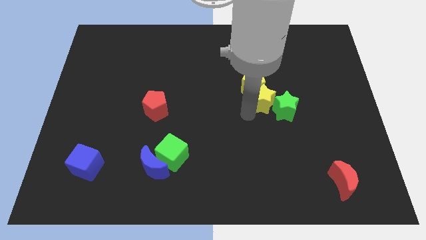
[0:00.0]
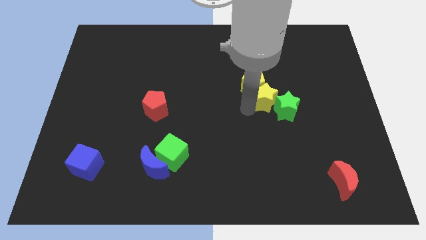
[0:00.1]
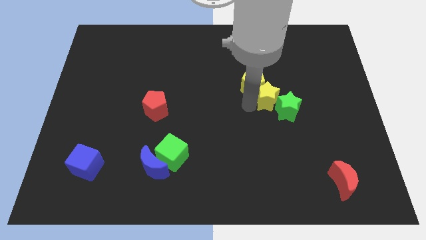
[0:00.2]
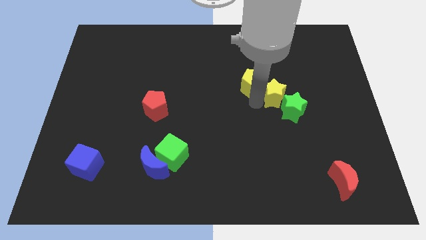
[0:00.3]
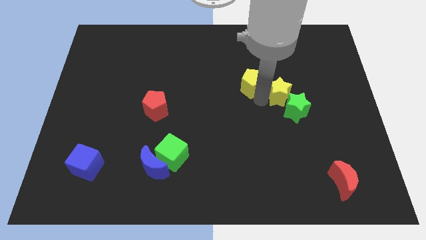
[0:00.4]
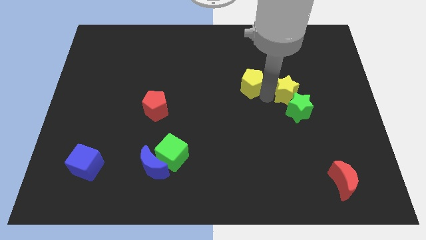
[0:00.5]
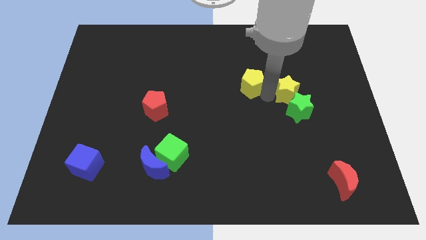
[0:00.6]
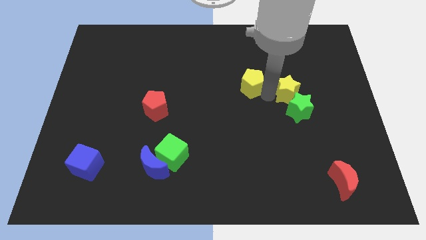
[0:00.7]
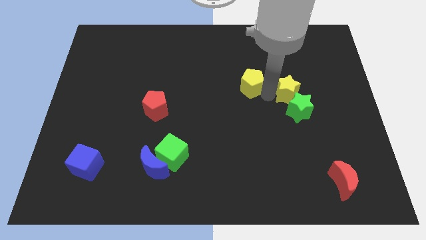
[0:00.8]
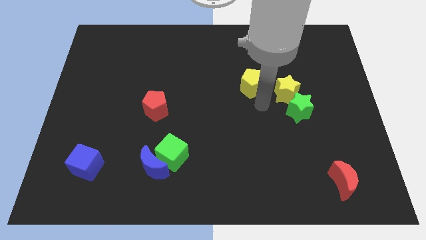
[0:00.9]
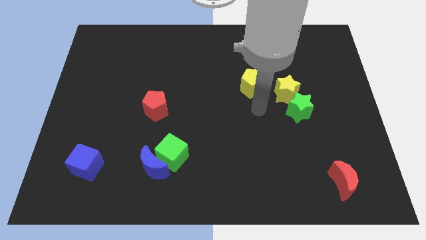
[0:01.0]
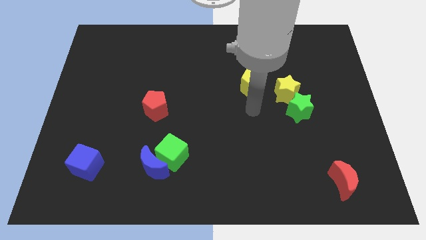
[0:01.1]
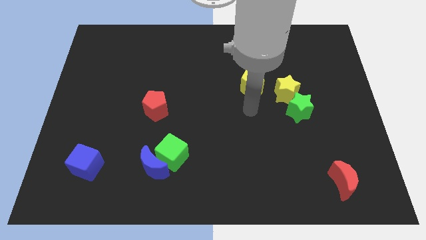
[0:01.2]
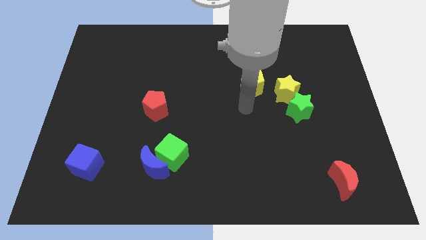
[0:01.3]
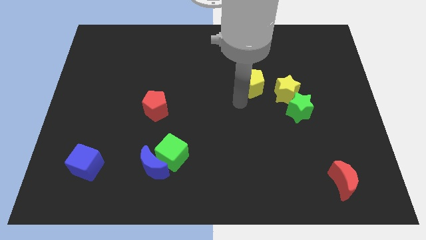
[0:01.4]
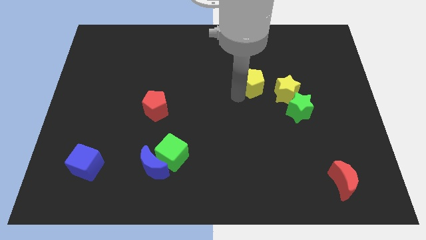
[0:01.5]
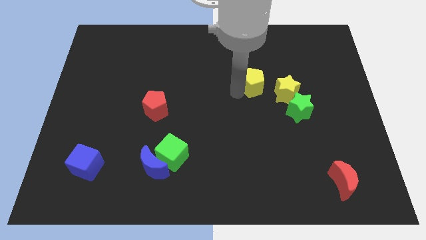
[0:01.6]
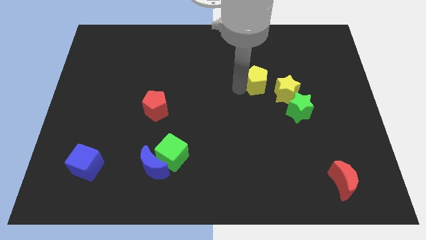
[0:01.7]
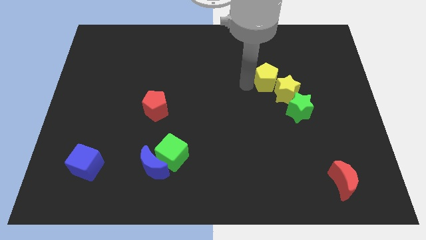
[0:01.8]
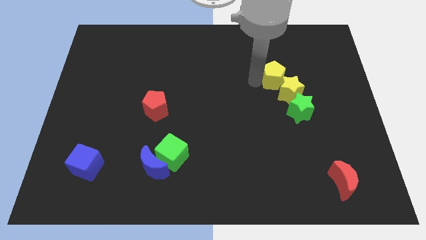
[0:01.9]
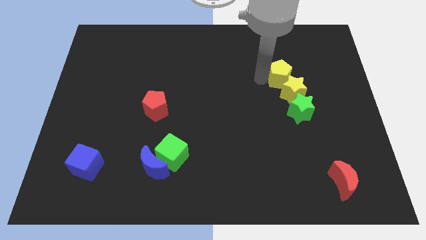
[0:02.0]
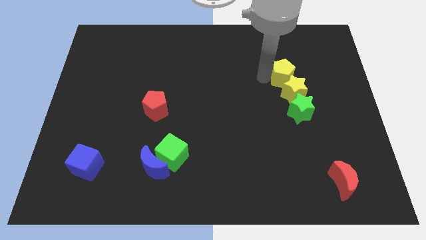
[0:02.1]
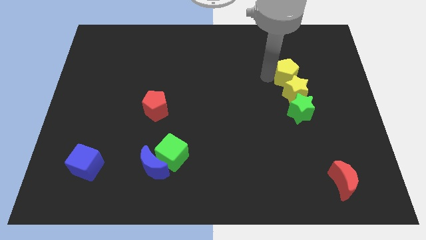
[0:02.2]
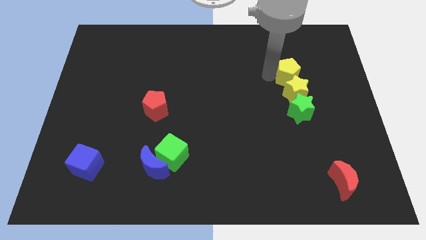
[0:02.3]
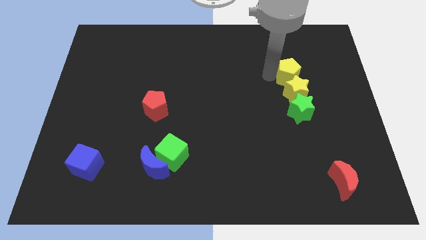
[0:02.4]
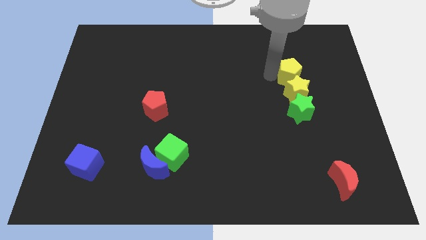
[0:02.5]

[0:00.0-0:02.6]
move the yellow pentagon towards the top side of the yellow star

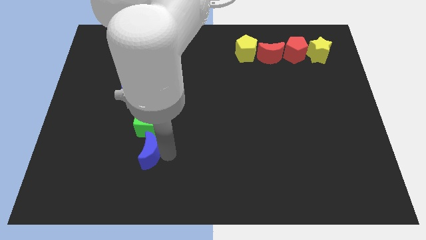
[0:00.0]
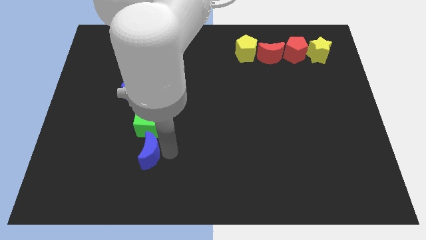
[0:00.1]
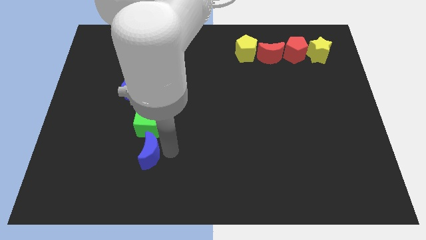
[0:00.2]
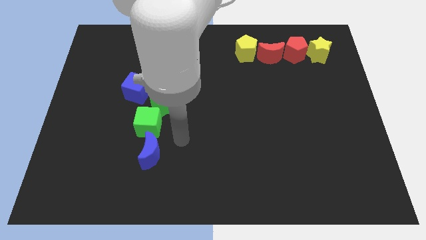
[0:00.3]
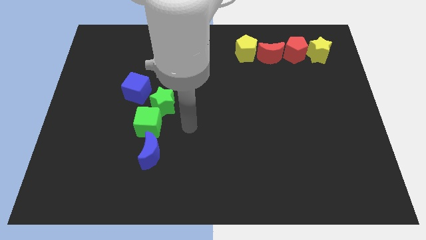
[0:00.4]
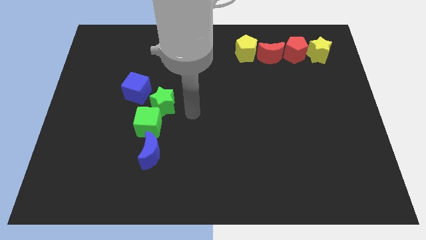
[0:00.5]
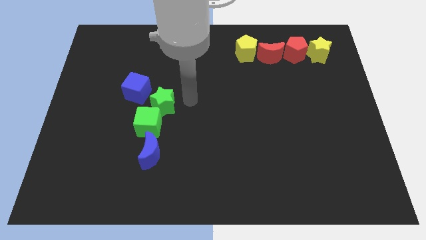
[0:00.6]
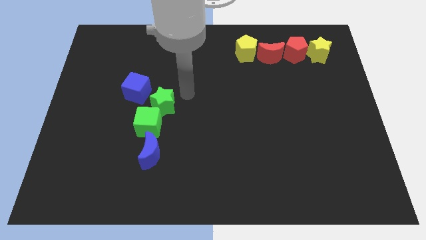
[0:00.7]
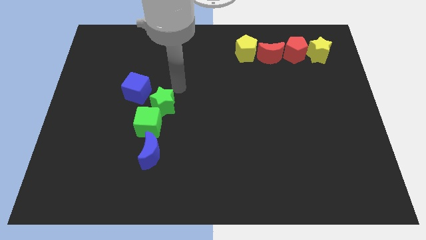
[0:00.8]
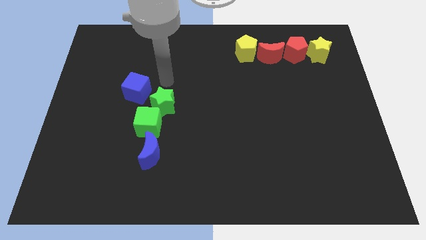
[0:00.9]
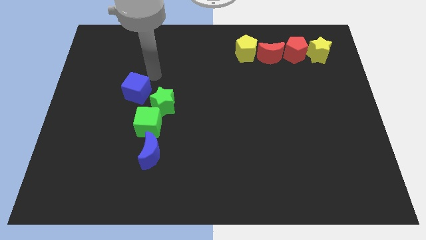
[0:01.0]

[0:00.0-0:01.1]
push the arm away from the blue crescent

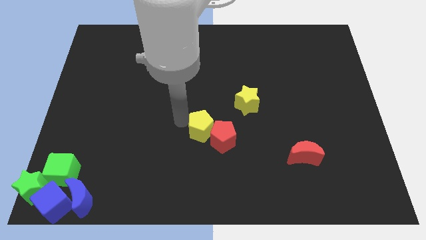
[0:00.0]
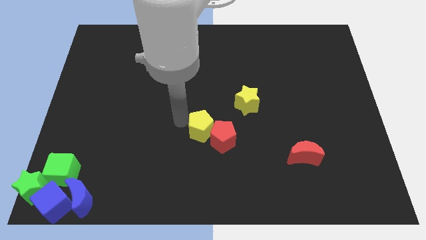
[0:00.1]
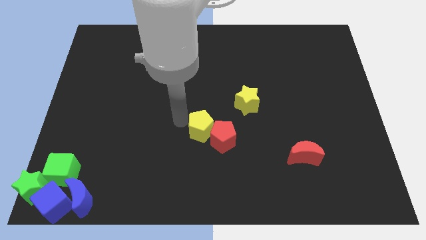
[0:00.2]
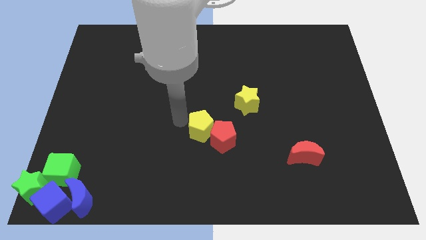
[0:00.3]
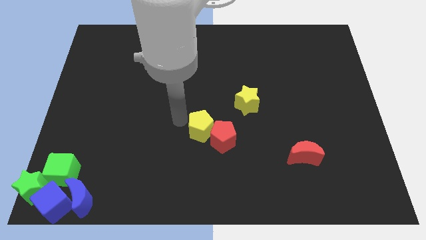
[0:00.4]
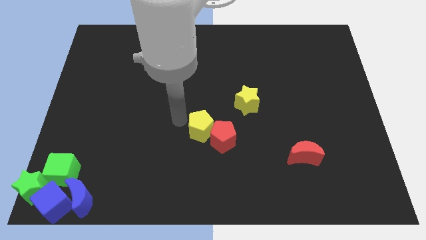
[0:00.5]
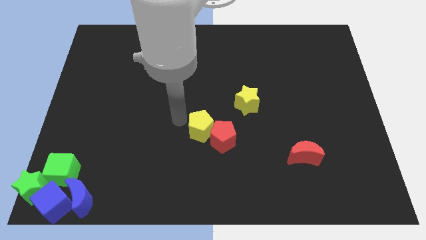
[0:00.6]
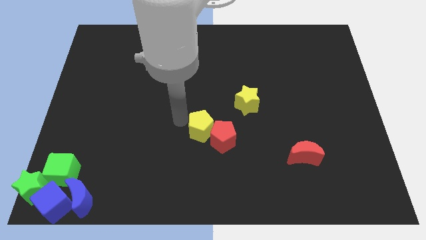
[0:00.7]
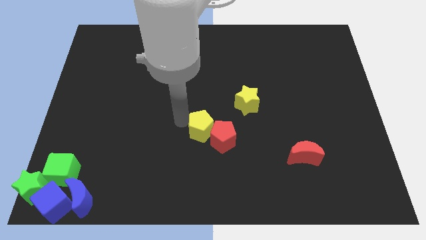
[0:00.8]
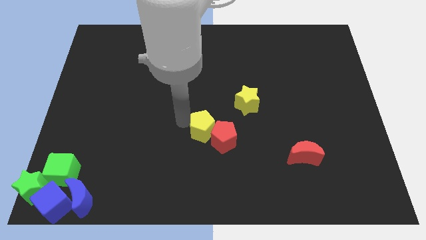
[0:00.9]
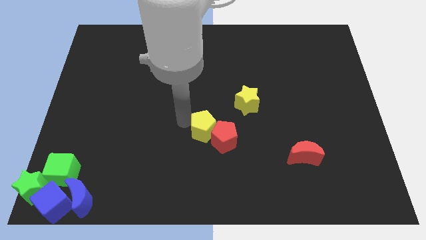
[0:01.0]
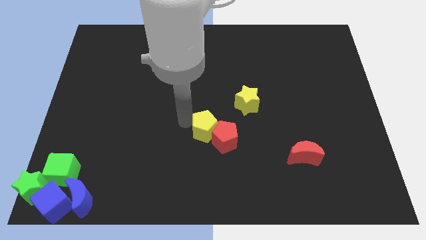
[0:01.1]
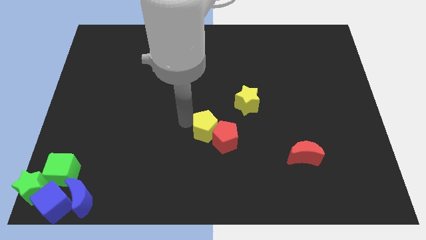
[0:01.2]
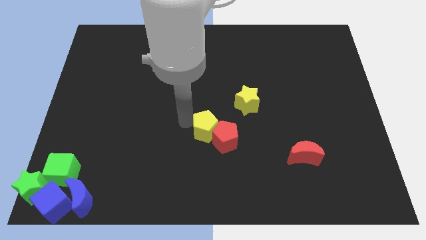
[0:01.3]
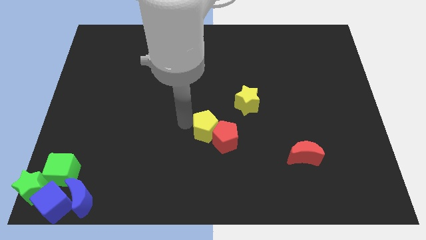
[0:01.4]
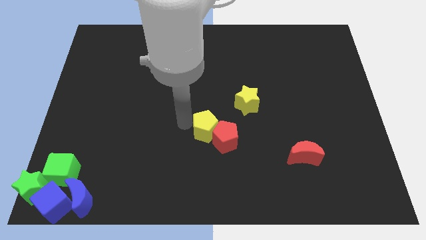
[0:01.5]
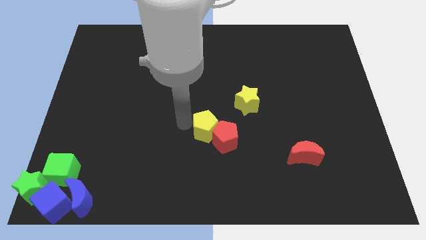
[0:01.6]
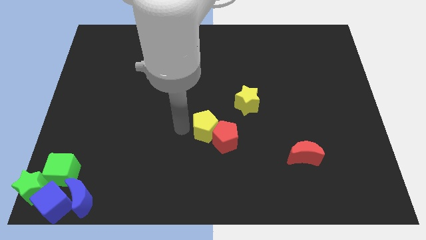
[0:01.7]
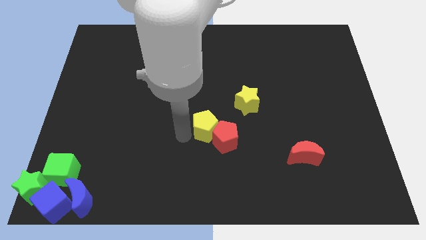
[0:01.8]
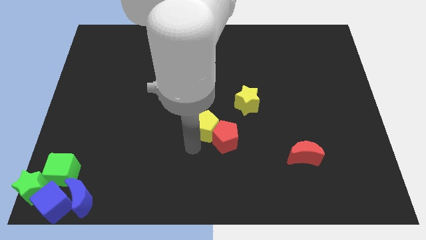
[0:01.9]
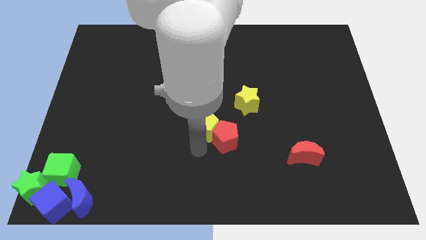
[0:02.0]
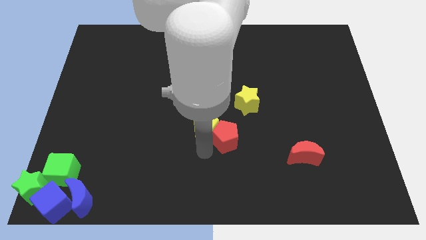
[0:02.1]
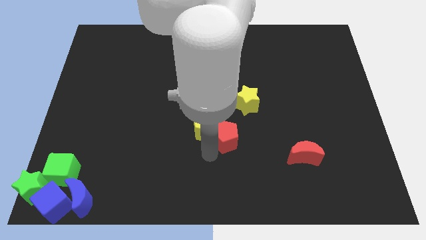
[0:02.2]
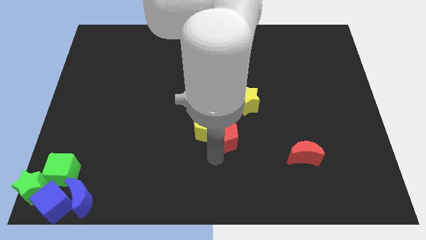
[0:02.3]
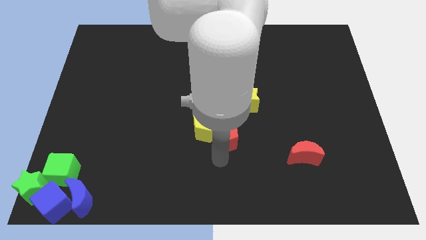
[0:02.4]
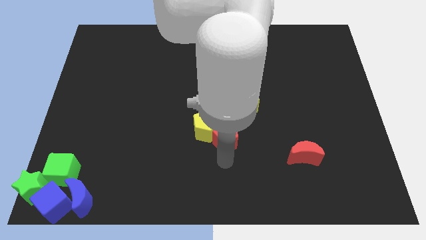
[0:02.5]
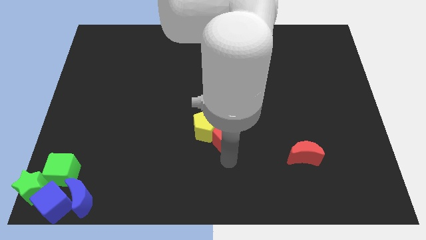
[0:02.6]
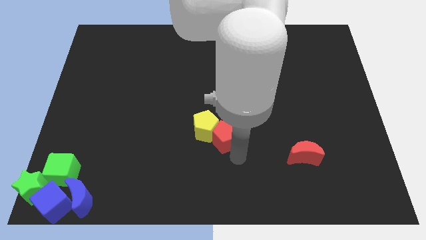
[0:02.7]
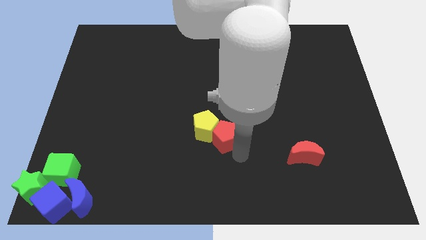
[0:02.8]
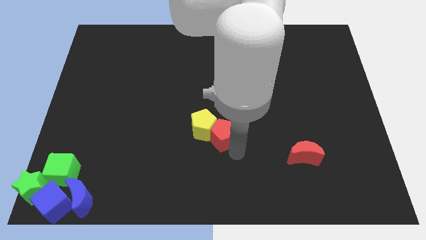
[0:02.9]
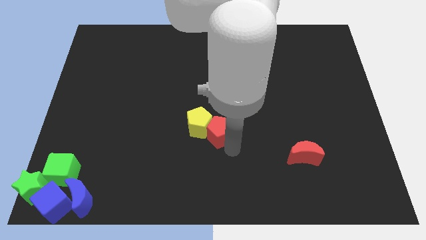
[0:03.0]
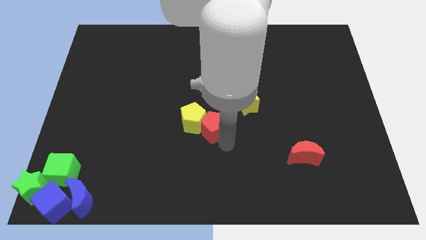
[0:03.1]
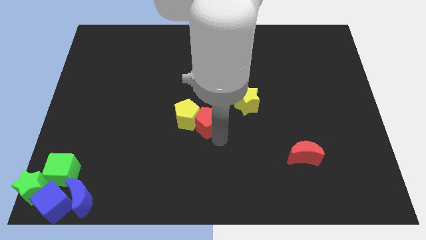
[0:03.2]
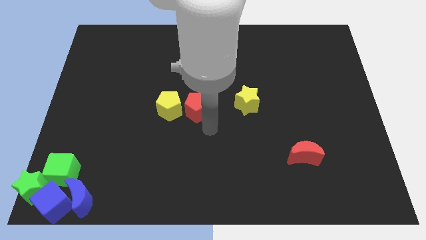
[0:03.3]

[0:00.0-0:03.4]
push the red pentagon into the yellow pentagon

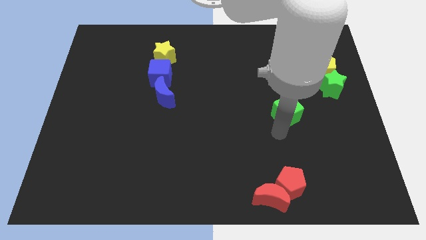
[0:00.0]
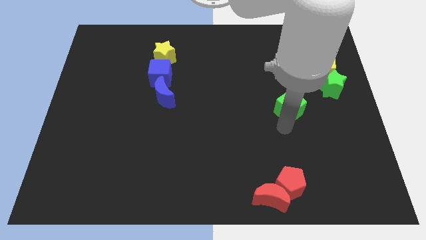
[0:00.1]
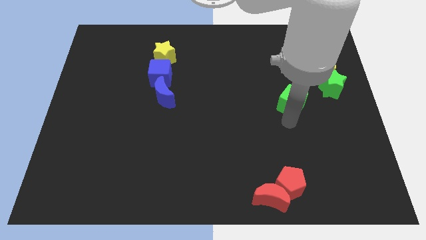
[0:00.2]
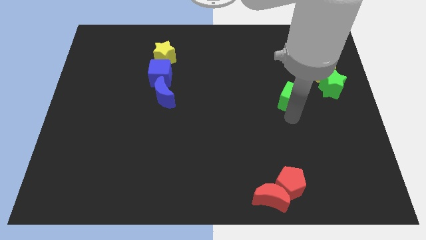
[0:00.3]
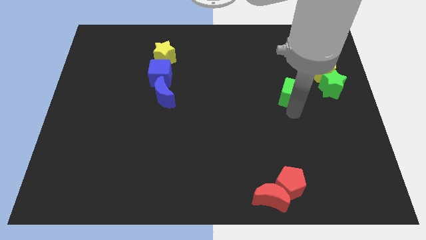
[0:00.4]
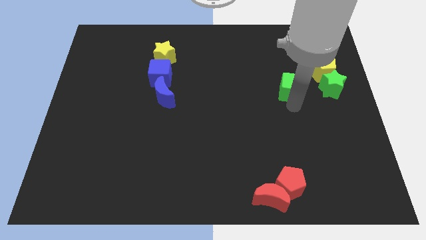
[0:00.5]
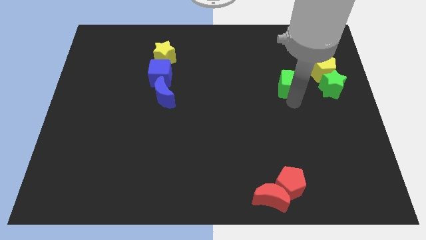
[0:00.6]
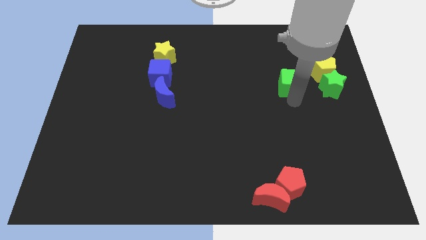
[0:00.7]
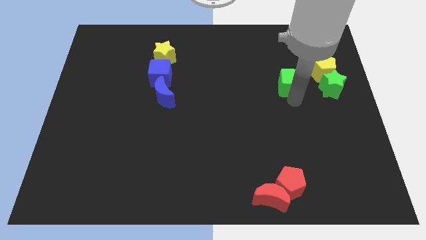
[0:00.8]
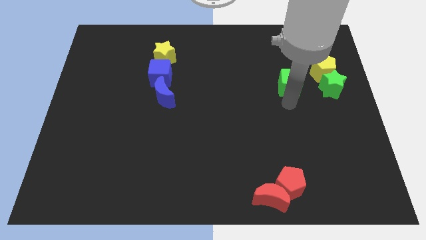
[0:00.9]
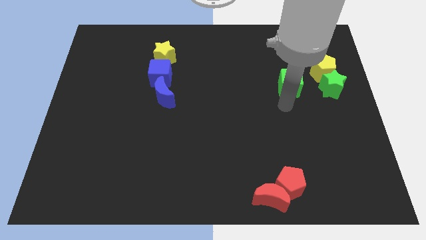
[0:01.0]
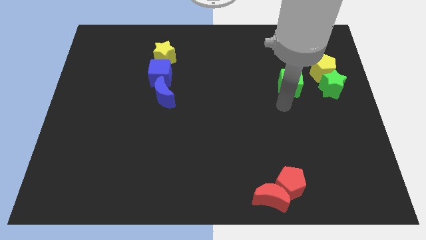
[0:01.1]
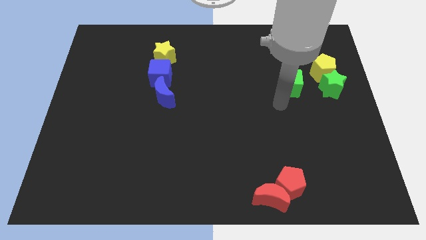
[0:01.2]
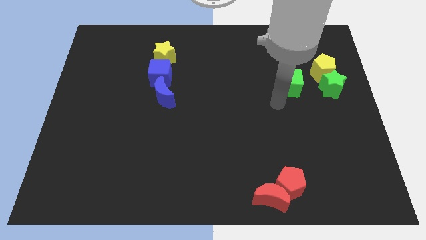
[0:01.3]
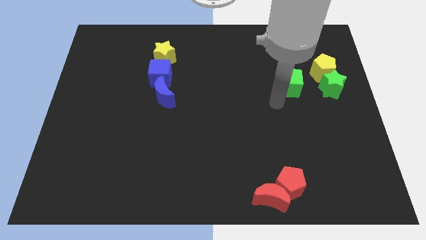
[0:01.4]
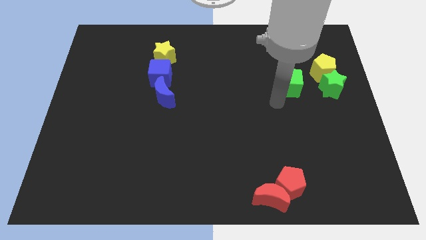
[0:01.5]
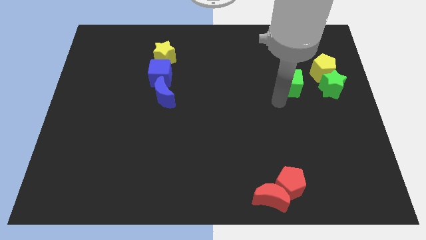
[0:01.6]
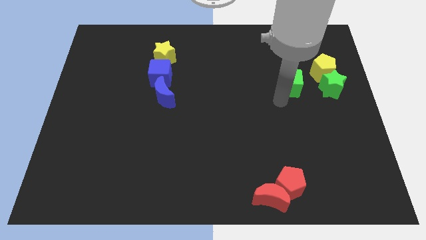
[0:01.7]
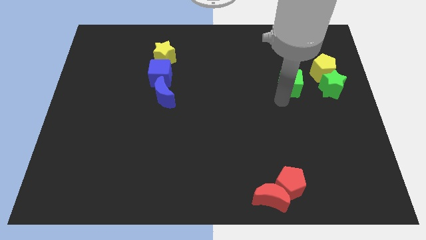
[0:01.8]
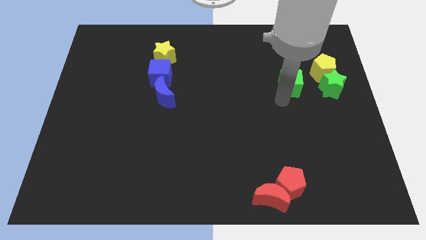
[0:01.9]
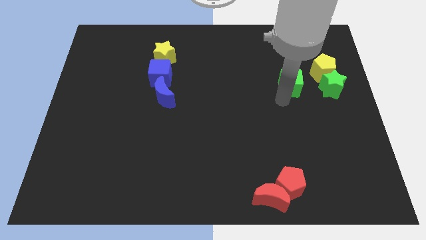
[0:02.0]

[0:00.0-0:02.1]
move green cube to the left of green star
